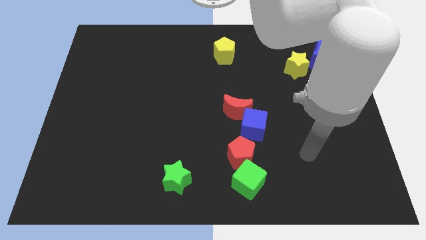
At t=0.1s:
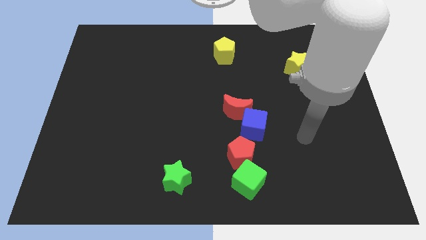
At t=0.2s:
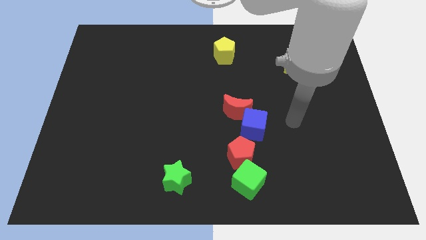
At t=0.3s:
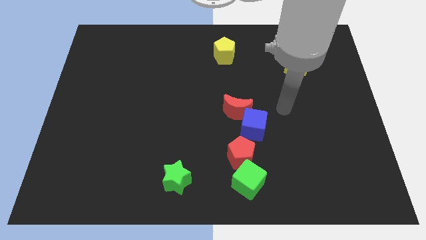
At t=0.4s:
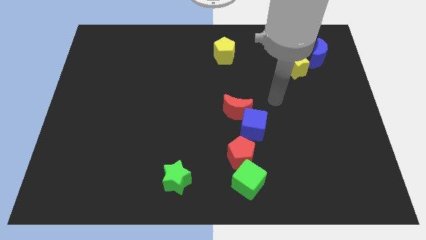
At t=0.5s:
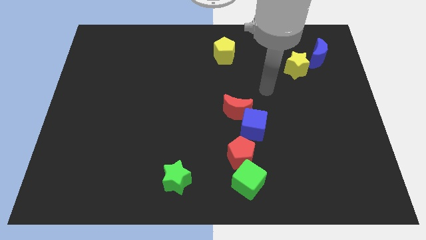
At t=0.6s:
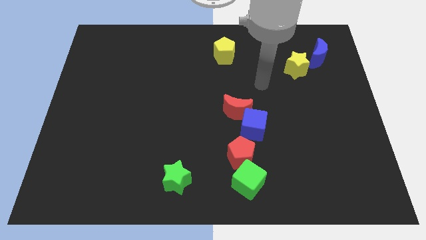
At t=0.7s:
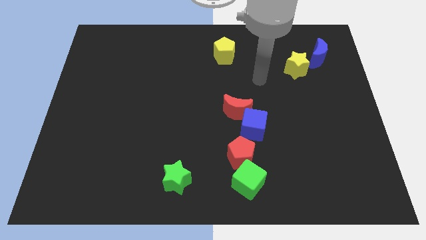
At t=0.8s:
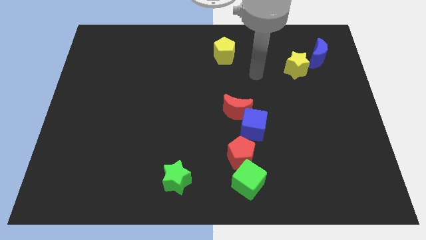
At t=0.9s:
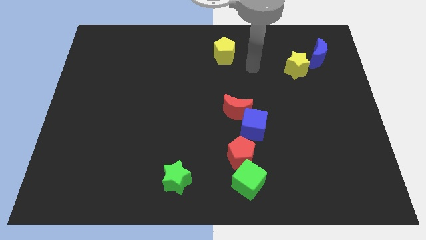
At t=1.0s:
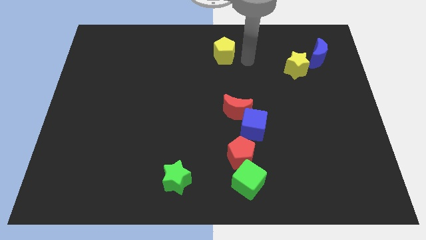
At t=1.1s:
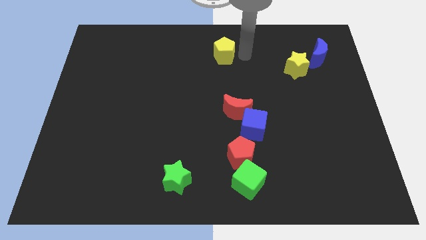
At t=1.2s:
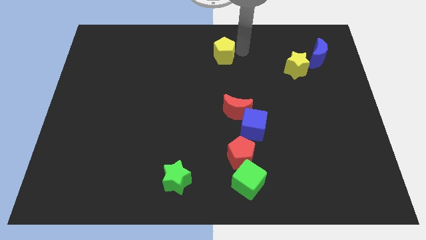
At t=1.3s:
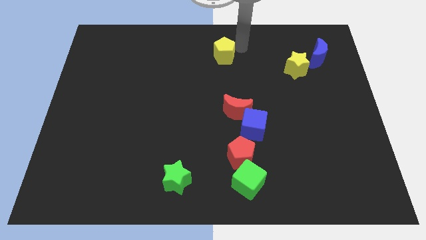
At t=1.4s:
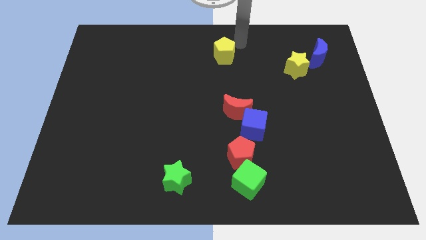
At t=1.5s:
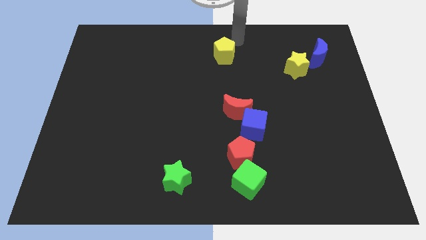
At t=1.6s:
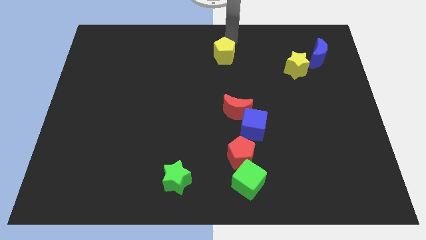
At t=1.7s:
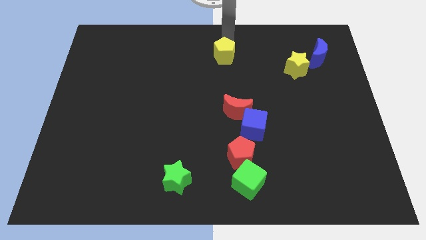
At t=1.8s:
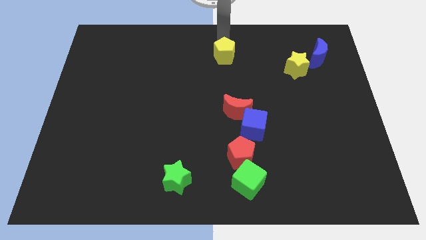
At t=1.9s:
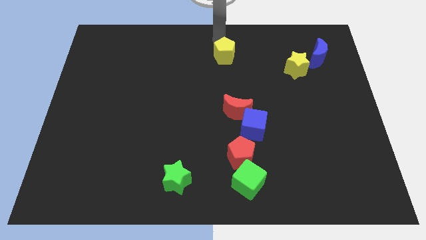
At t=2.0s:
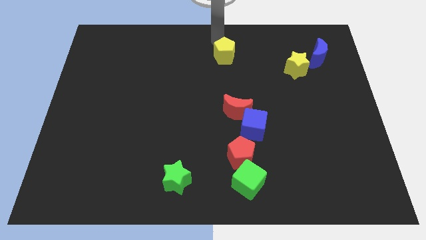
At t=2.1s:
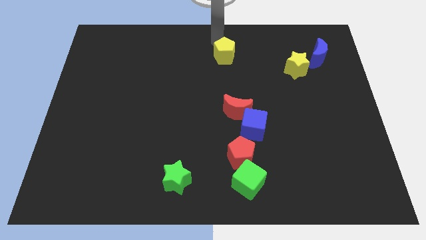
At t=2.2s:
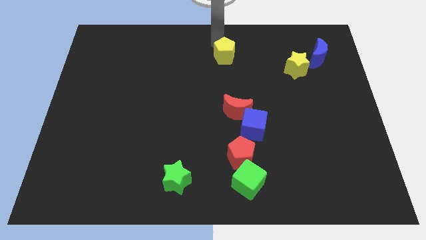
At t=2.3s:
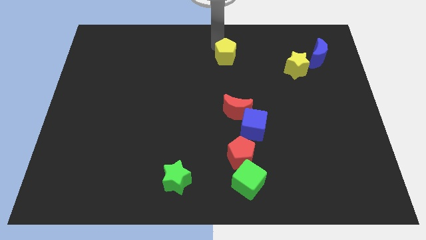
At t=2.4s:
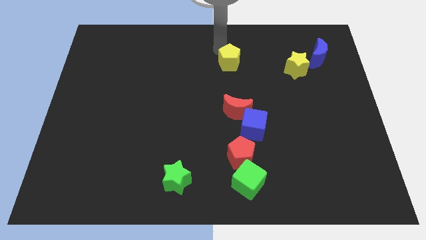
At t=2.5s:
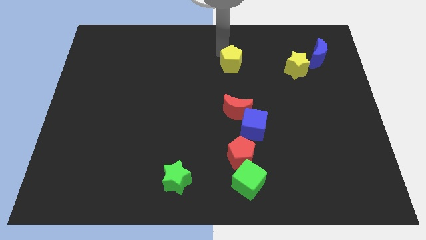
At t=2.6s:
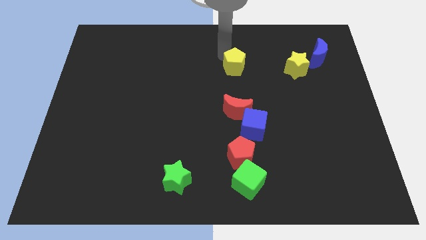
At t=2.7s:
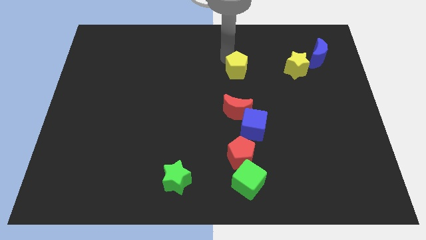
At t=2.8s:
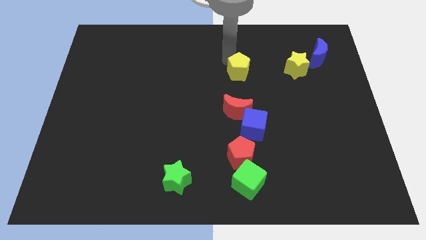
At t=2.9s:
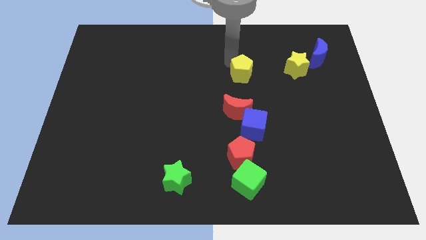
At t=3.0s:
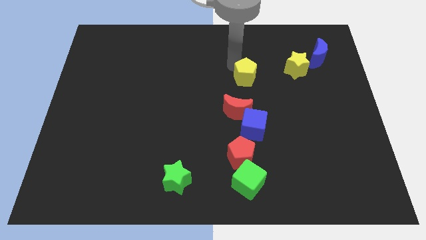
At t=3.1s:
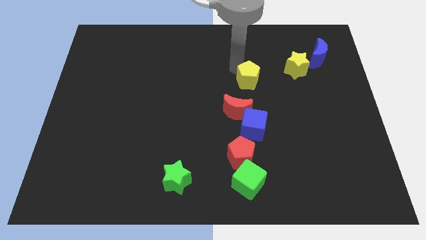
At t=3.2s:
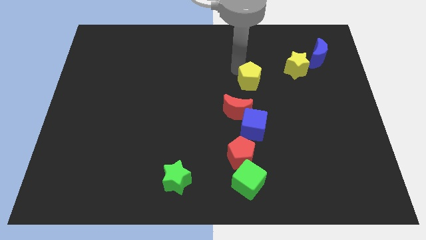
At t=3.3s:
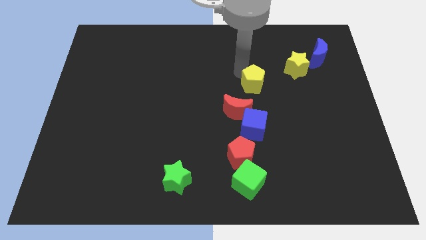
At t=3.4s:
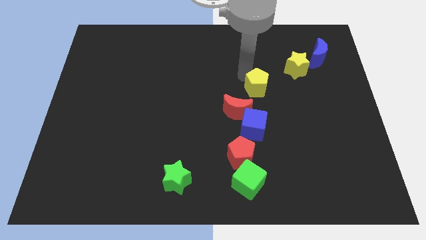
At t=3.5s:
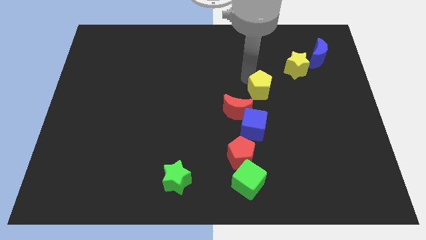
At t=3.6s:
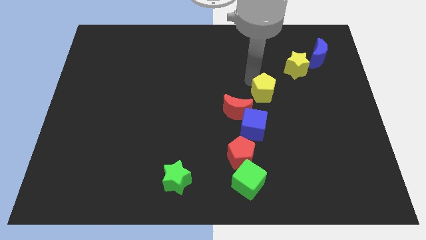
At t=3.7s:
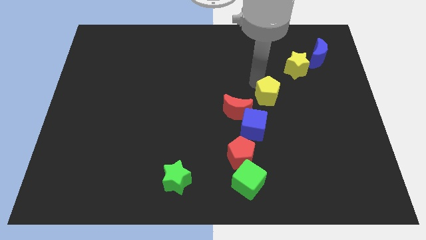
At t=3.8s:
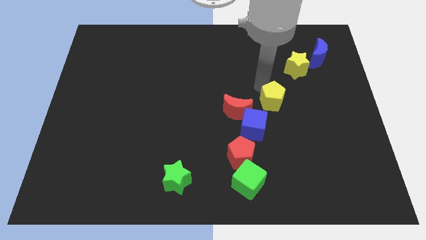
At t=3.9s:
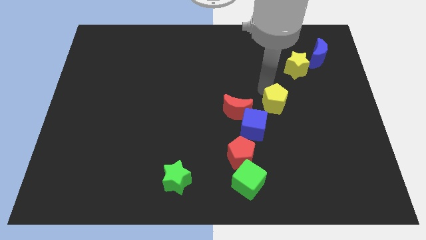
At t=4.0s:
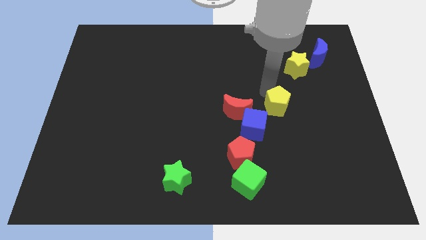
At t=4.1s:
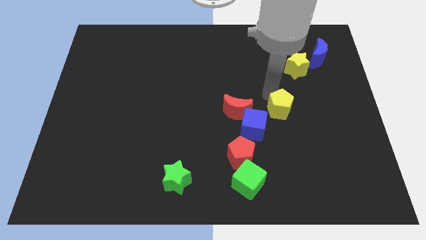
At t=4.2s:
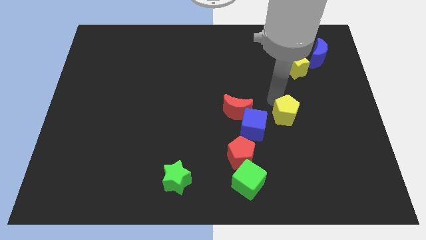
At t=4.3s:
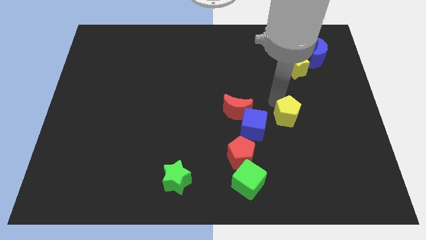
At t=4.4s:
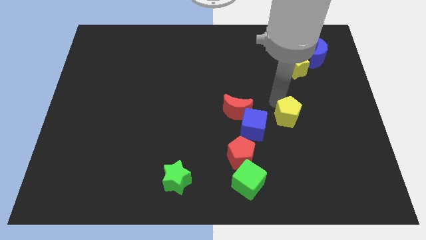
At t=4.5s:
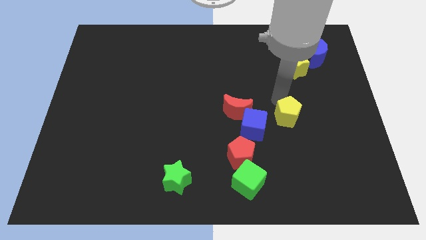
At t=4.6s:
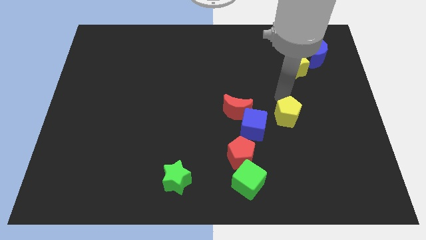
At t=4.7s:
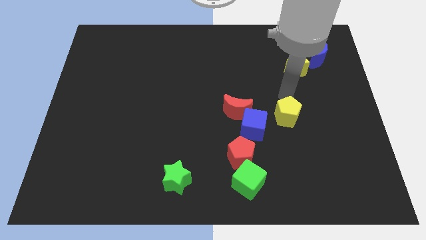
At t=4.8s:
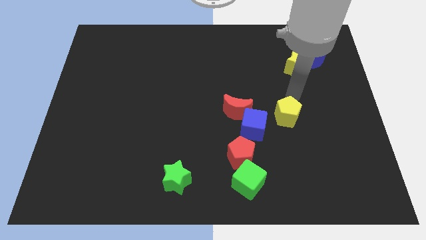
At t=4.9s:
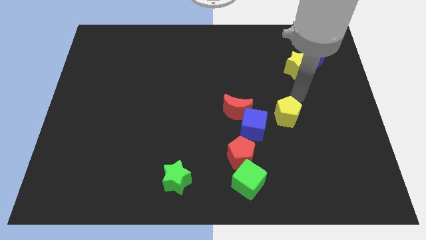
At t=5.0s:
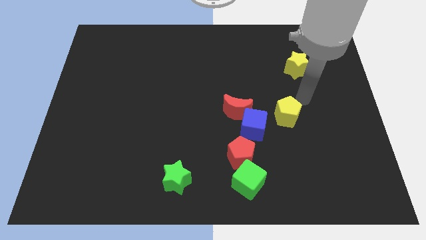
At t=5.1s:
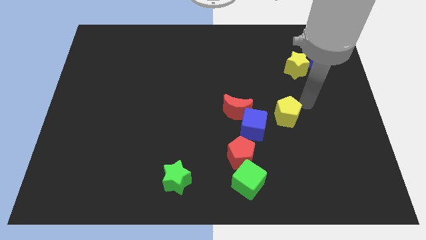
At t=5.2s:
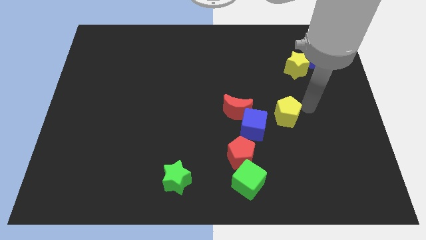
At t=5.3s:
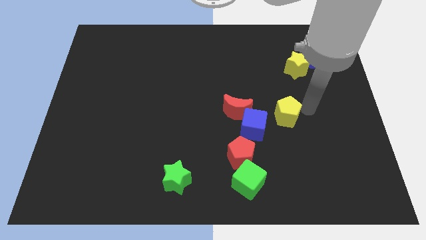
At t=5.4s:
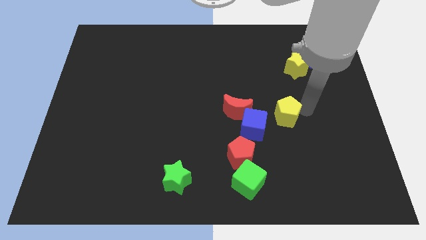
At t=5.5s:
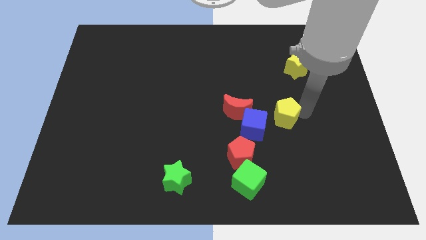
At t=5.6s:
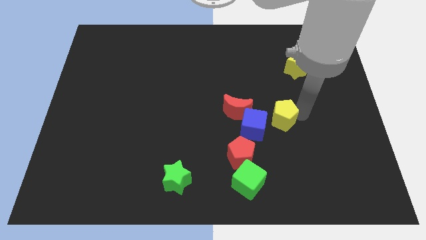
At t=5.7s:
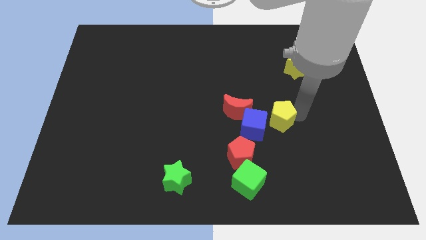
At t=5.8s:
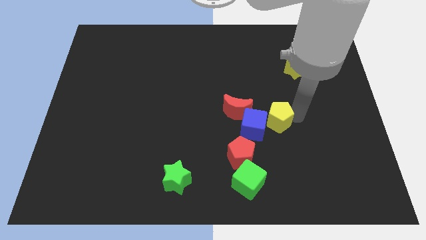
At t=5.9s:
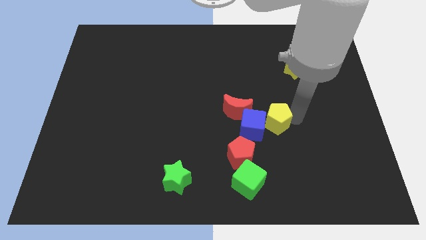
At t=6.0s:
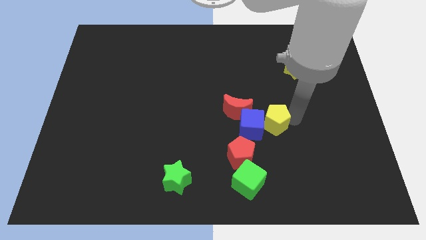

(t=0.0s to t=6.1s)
slide the yellow pentagon next to the blue cube

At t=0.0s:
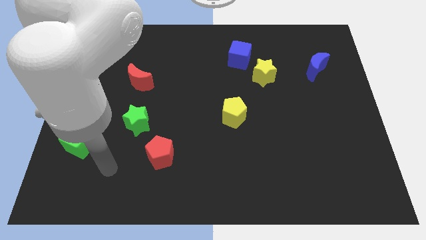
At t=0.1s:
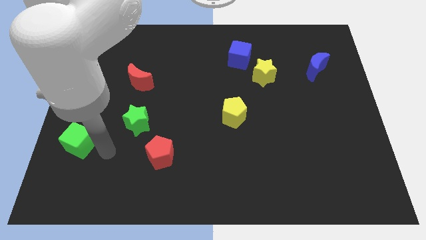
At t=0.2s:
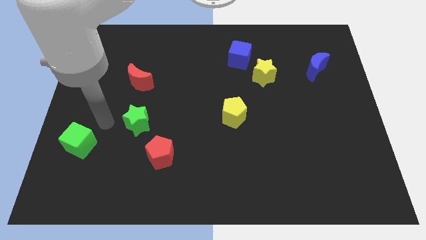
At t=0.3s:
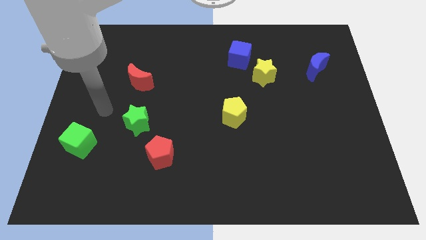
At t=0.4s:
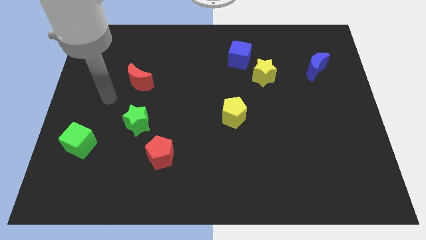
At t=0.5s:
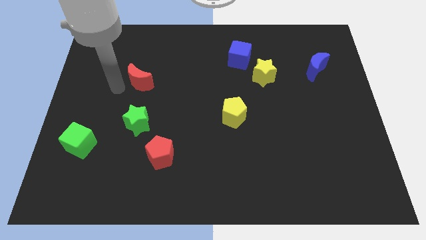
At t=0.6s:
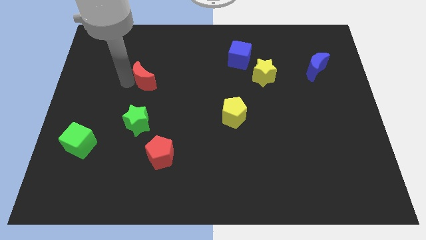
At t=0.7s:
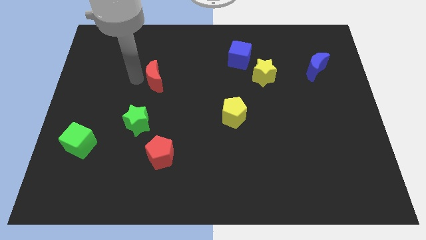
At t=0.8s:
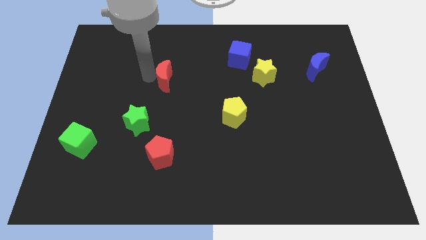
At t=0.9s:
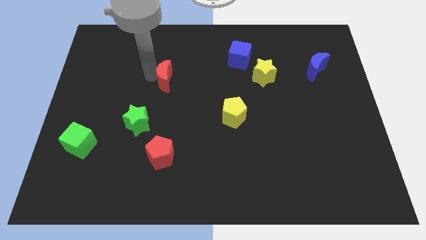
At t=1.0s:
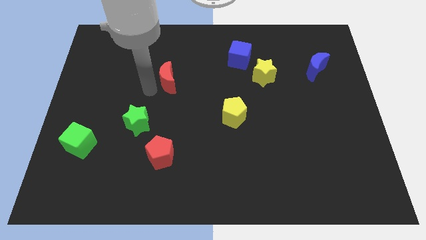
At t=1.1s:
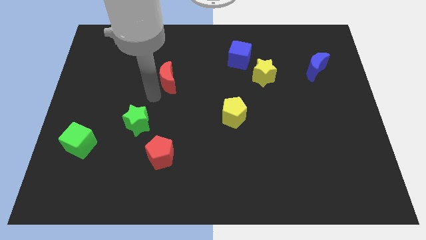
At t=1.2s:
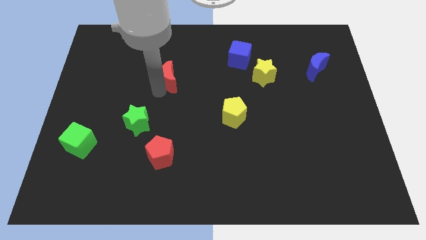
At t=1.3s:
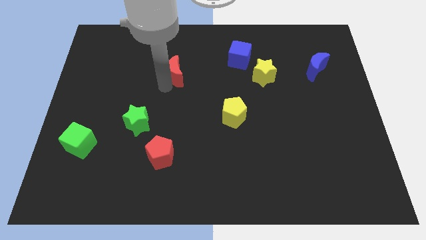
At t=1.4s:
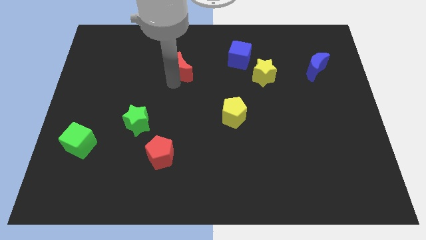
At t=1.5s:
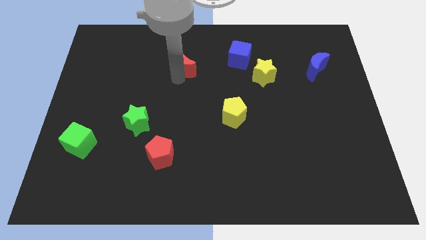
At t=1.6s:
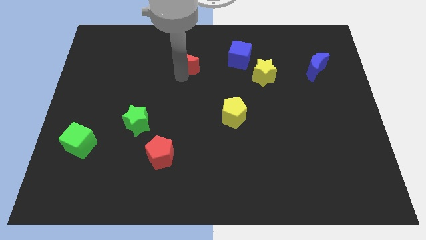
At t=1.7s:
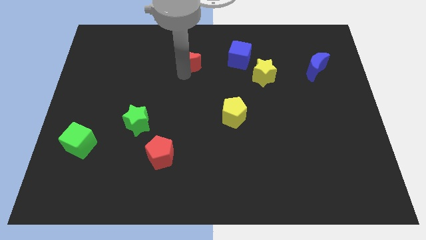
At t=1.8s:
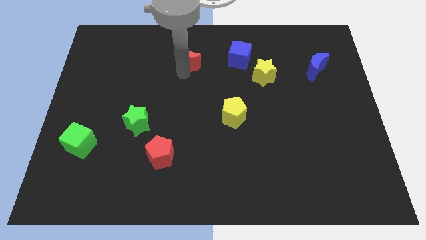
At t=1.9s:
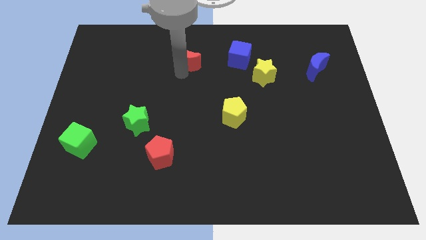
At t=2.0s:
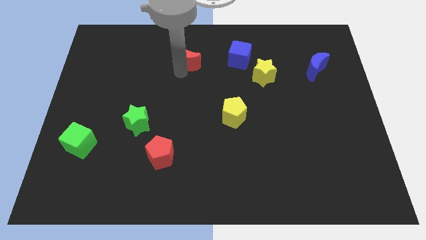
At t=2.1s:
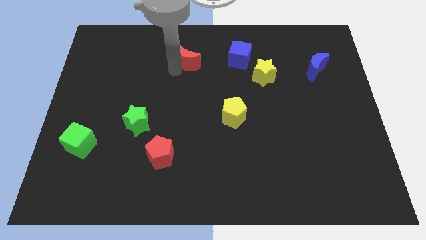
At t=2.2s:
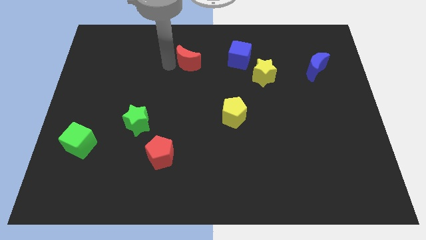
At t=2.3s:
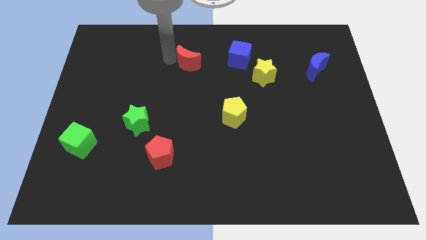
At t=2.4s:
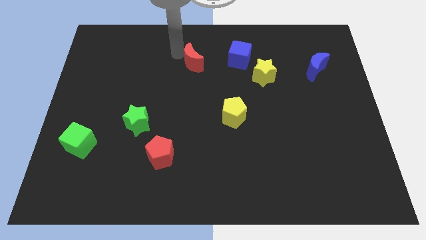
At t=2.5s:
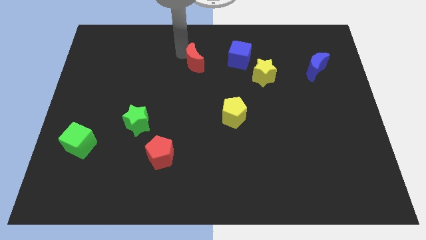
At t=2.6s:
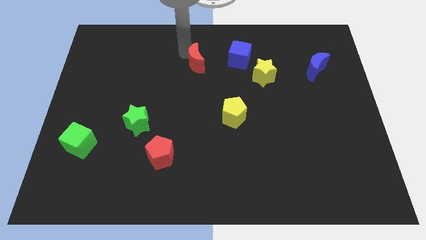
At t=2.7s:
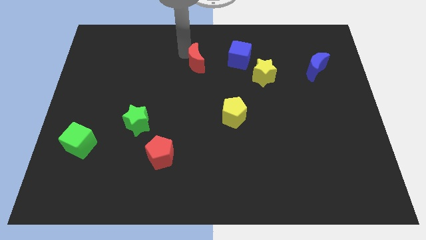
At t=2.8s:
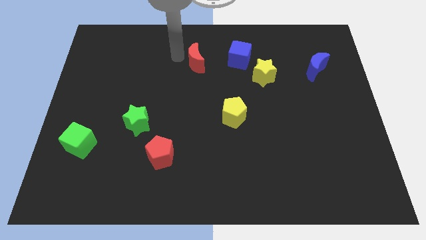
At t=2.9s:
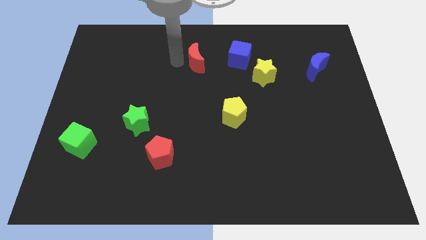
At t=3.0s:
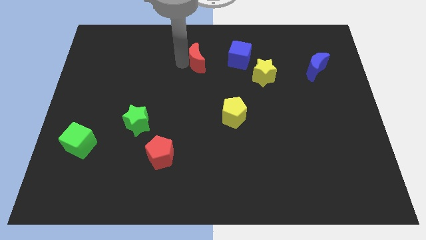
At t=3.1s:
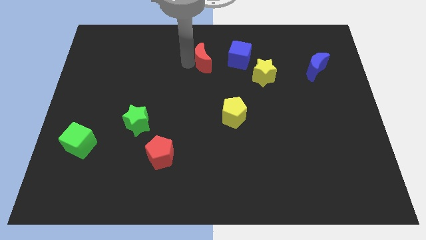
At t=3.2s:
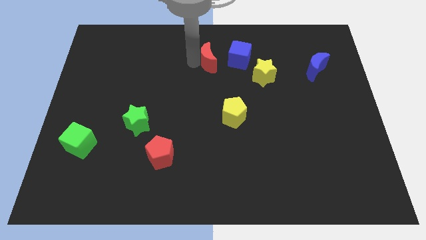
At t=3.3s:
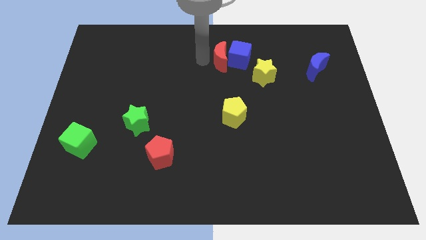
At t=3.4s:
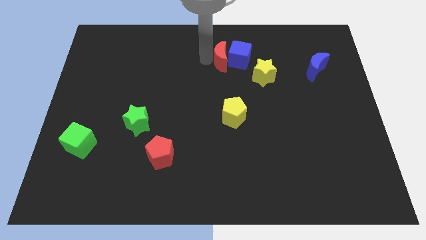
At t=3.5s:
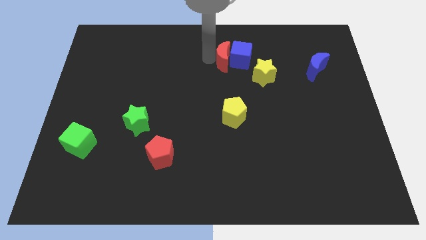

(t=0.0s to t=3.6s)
put the red moon towards the blue cube
